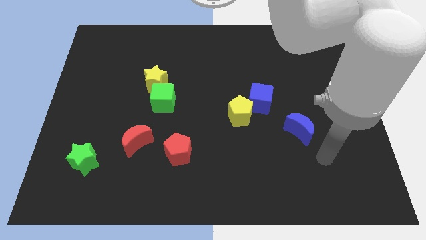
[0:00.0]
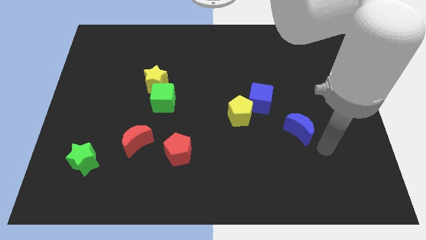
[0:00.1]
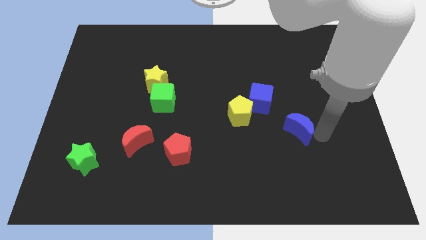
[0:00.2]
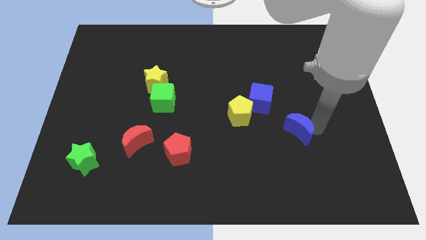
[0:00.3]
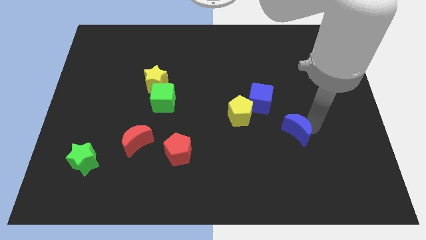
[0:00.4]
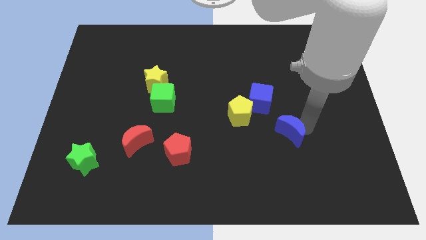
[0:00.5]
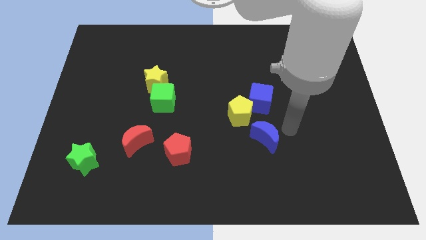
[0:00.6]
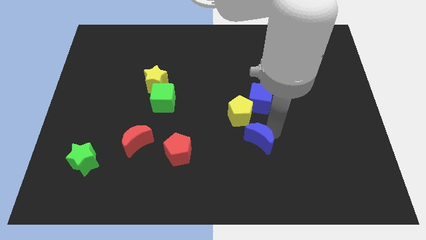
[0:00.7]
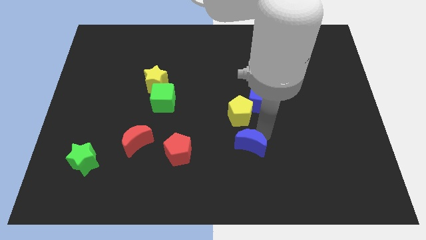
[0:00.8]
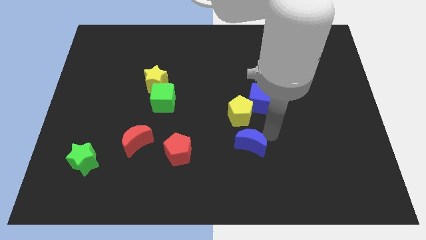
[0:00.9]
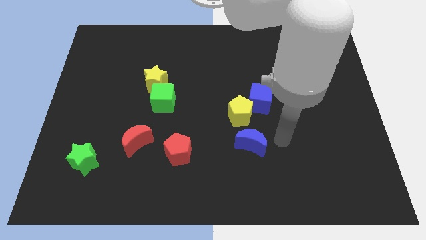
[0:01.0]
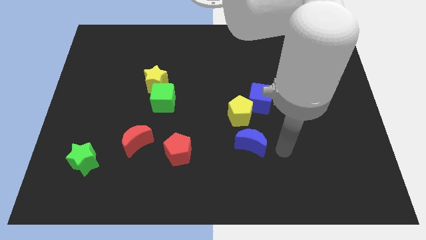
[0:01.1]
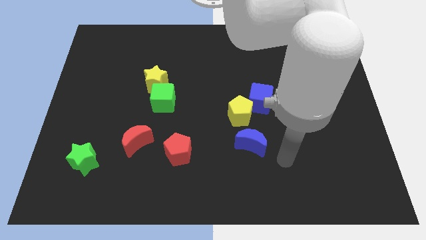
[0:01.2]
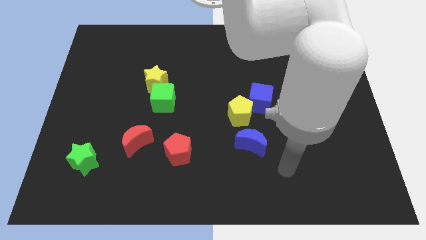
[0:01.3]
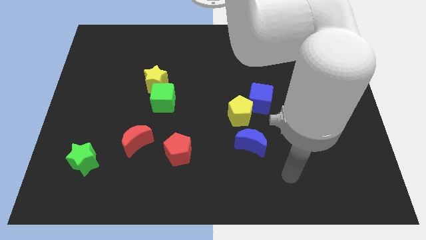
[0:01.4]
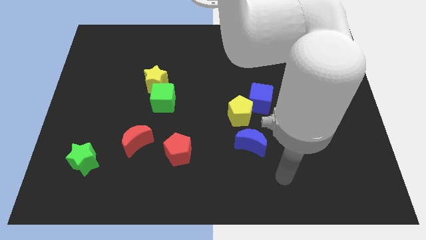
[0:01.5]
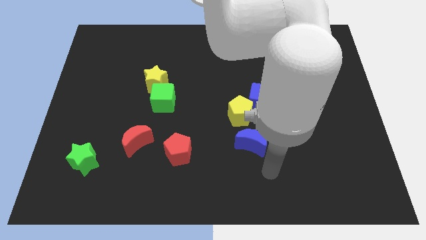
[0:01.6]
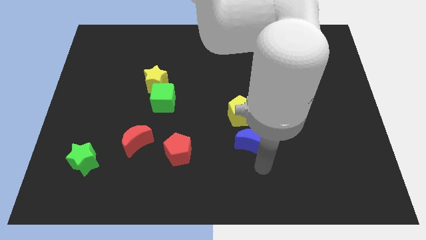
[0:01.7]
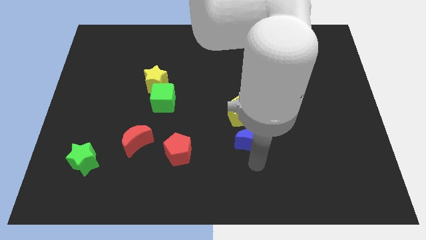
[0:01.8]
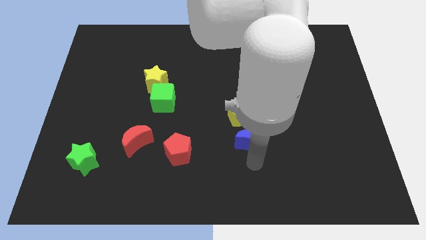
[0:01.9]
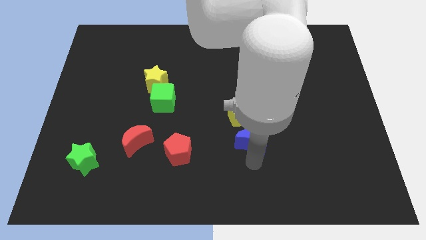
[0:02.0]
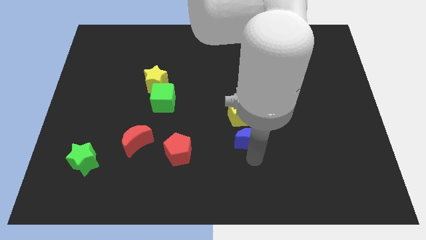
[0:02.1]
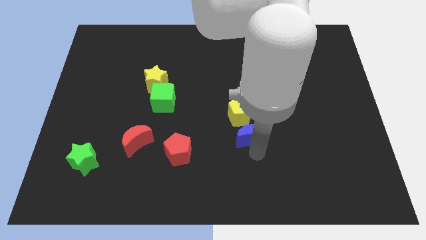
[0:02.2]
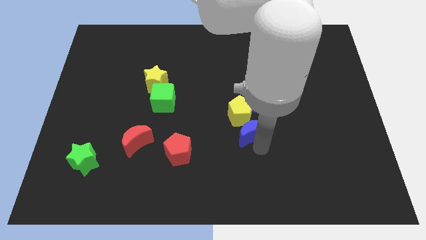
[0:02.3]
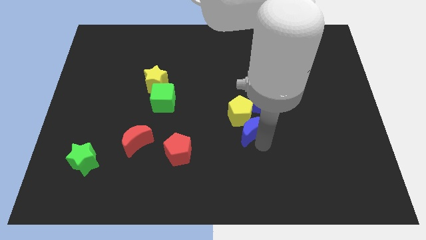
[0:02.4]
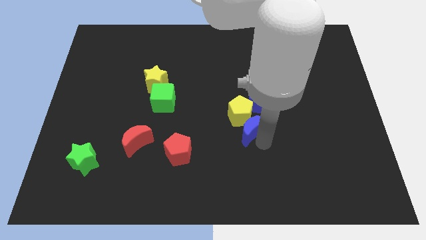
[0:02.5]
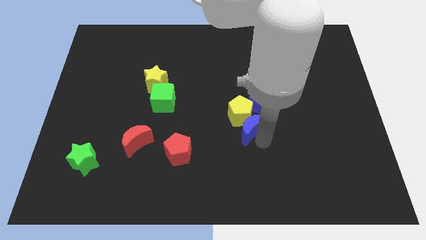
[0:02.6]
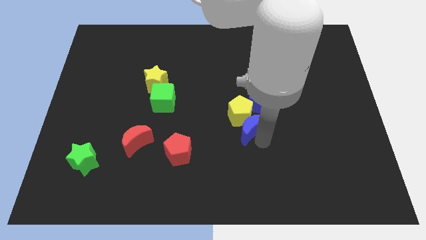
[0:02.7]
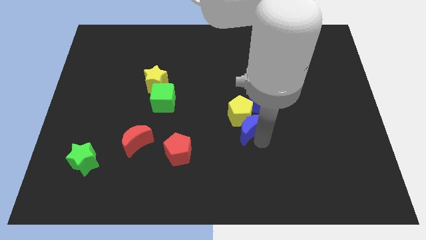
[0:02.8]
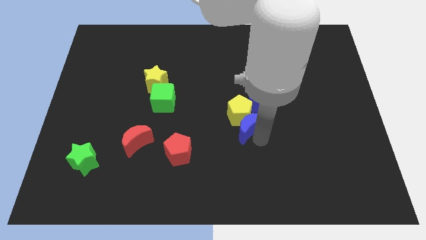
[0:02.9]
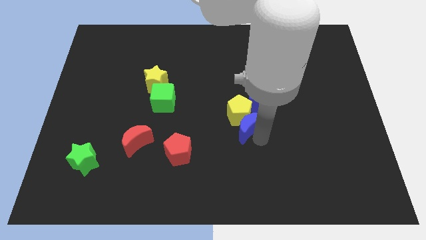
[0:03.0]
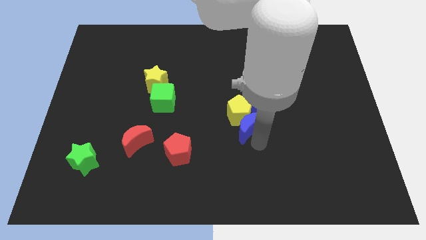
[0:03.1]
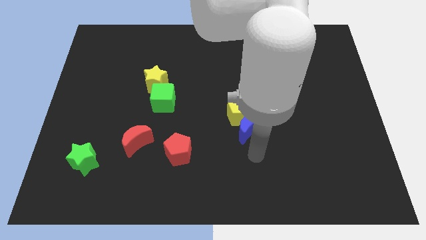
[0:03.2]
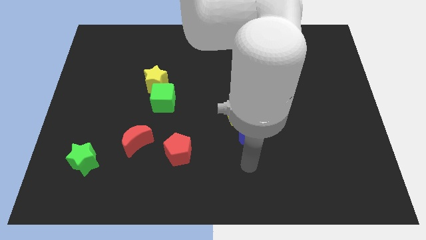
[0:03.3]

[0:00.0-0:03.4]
push the blue crescent into the yellow pentagon

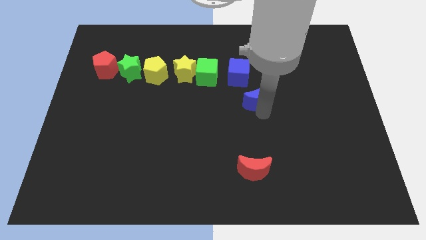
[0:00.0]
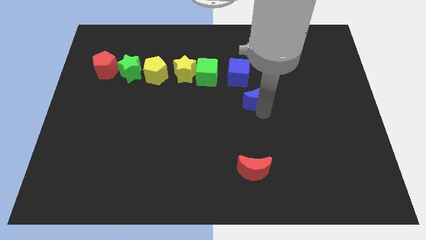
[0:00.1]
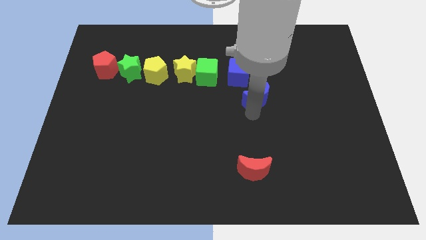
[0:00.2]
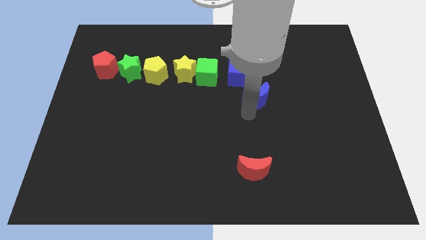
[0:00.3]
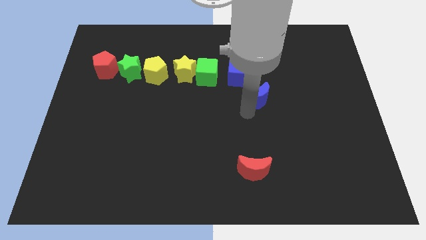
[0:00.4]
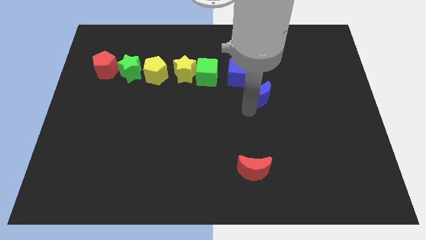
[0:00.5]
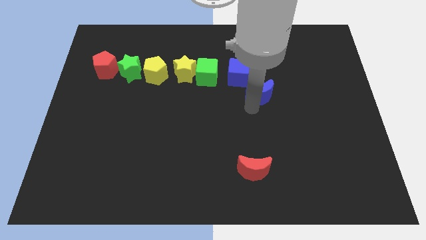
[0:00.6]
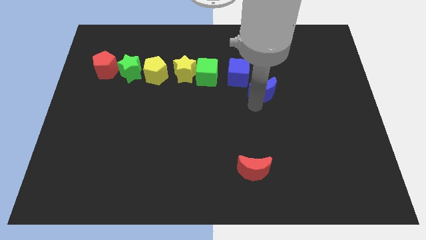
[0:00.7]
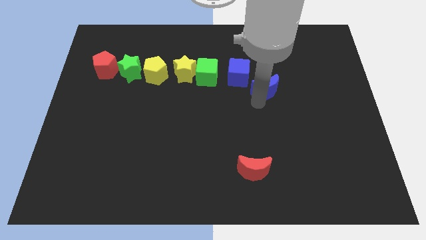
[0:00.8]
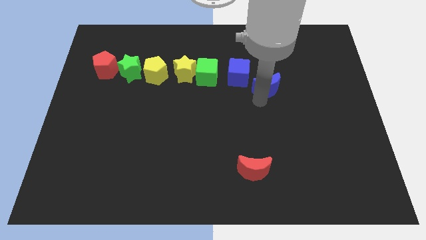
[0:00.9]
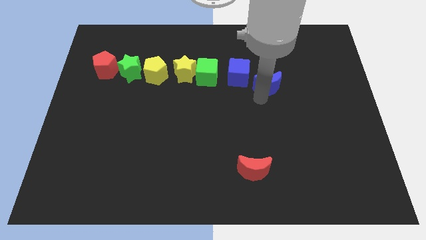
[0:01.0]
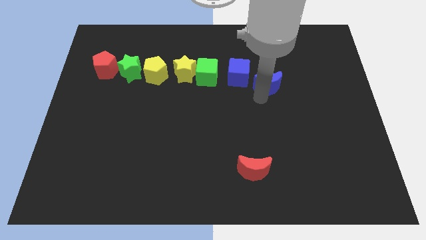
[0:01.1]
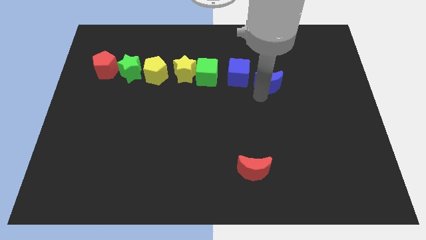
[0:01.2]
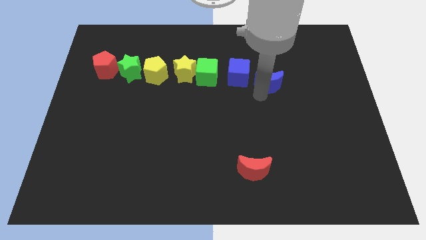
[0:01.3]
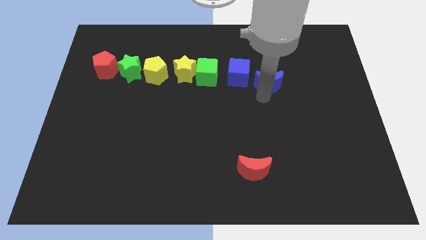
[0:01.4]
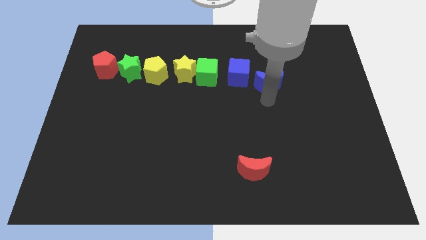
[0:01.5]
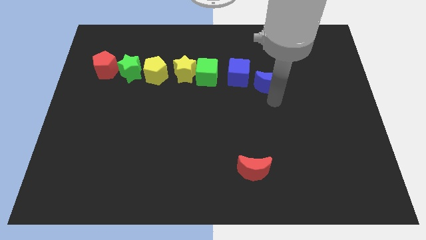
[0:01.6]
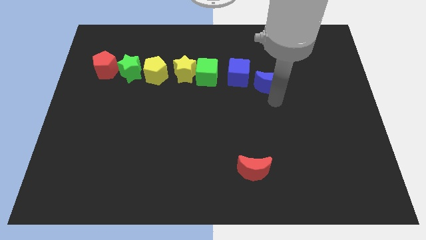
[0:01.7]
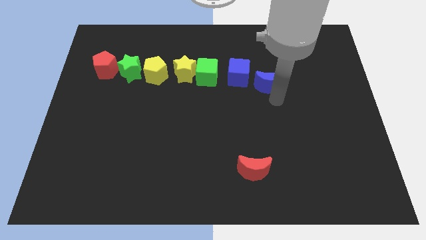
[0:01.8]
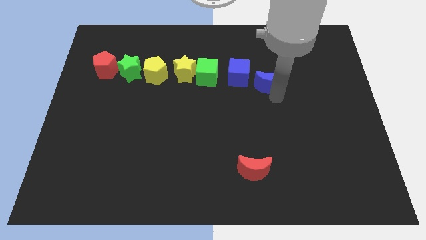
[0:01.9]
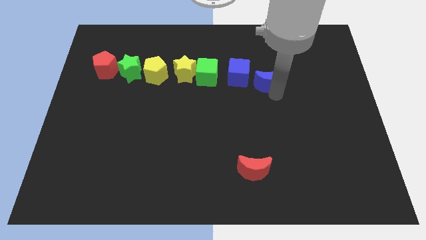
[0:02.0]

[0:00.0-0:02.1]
put the blue crescent on the right side of the blue cube

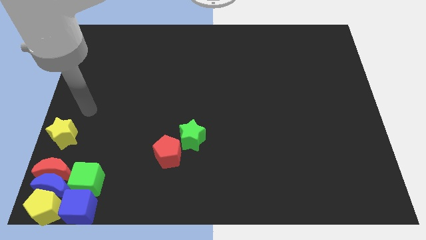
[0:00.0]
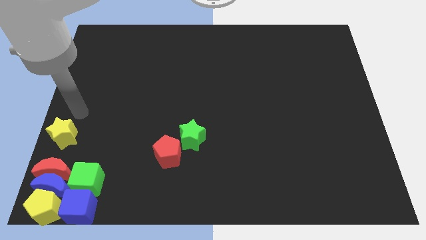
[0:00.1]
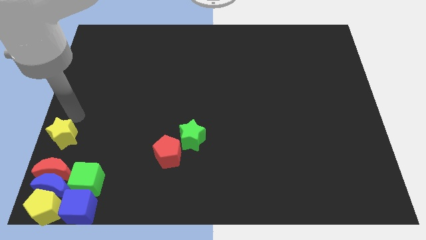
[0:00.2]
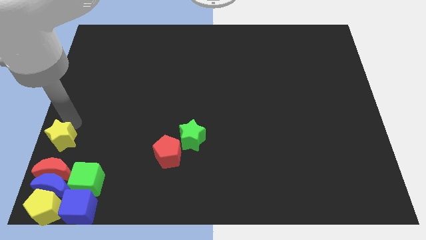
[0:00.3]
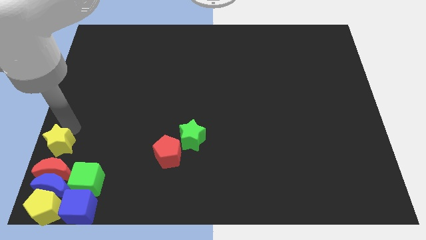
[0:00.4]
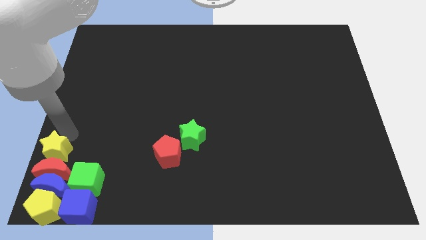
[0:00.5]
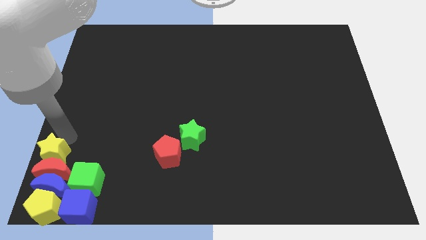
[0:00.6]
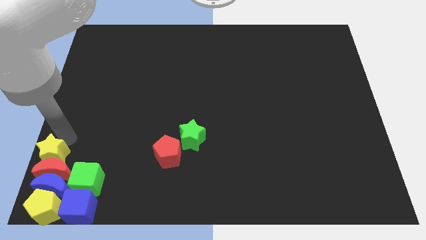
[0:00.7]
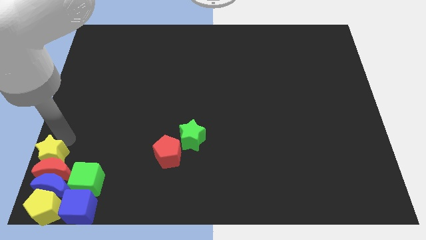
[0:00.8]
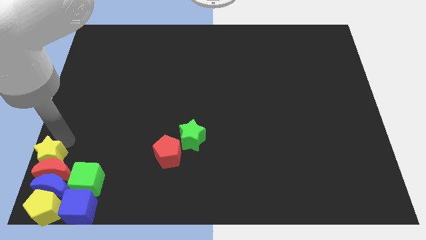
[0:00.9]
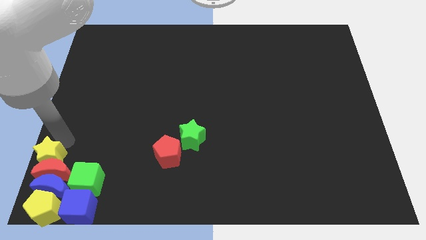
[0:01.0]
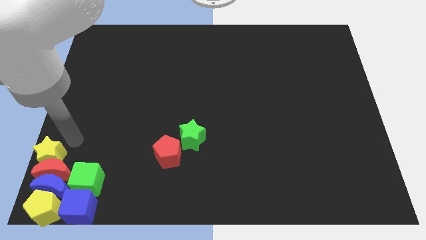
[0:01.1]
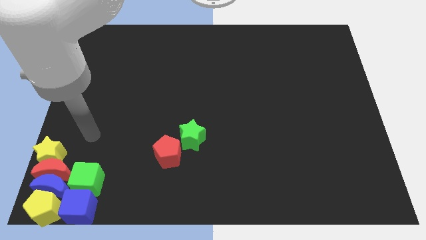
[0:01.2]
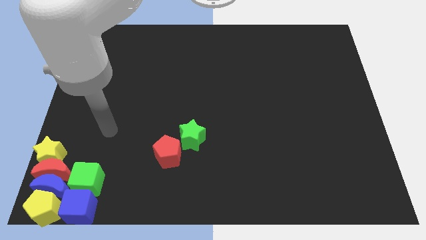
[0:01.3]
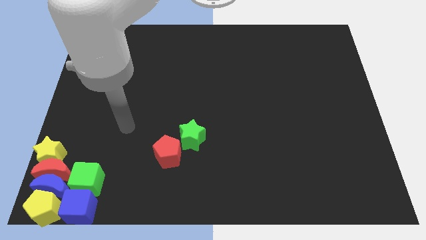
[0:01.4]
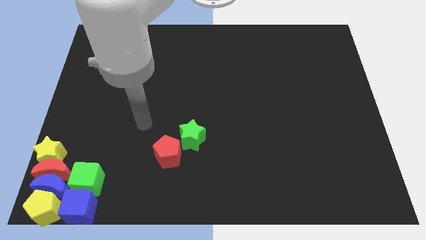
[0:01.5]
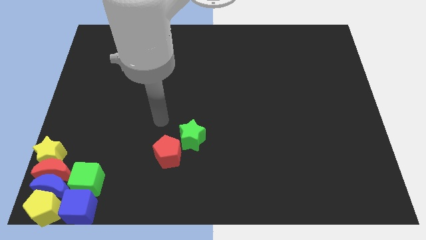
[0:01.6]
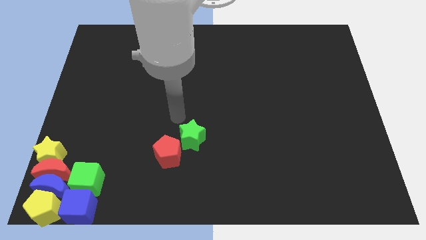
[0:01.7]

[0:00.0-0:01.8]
place yellow star to the top of the red moon

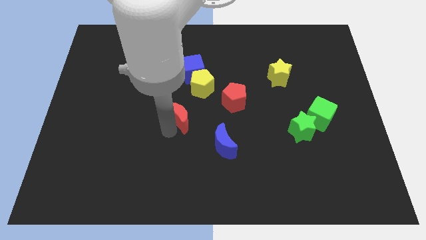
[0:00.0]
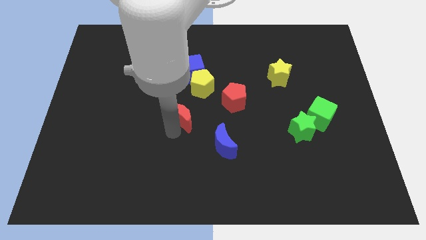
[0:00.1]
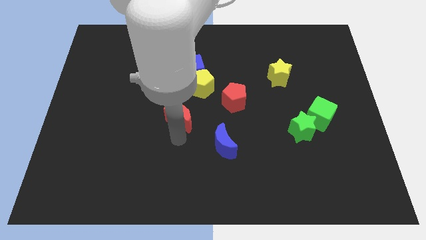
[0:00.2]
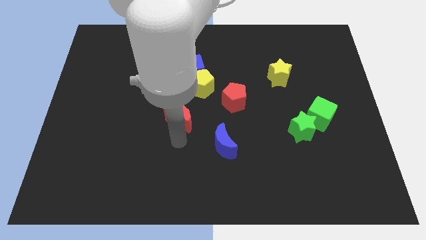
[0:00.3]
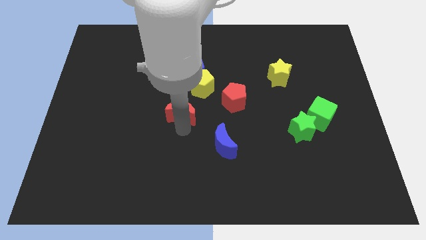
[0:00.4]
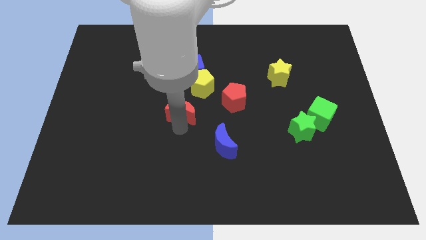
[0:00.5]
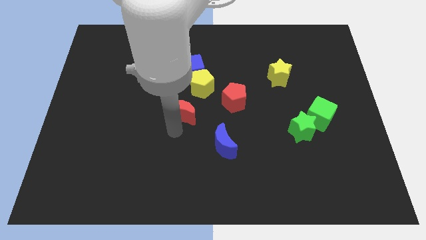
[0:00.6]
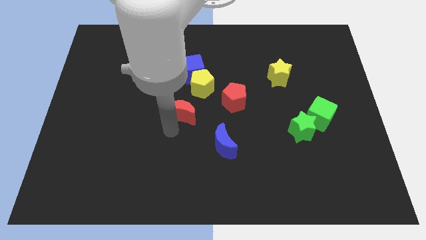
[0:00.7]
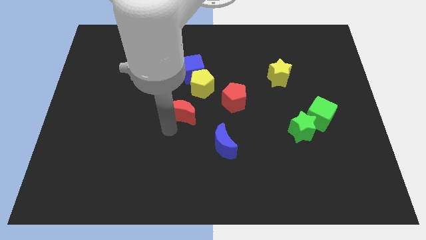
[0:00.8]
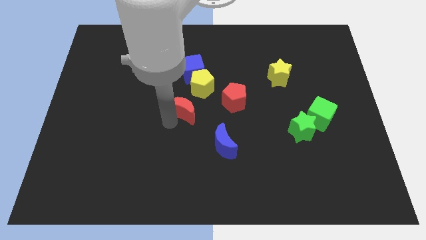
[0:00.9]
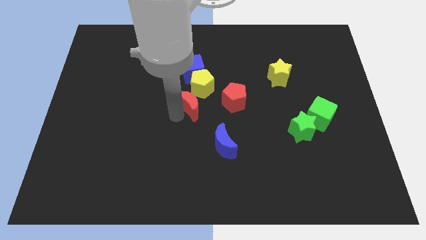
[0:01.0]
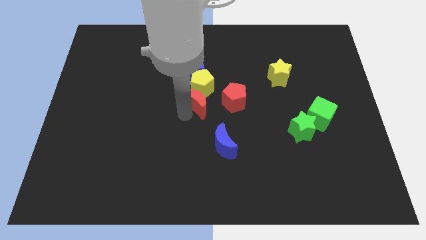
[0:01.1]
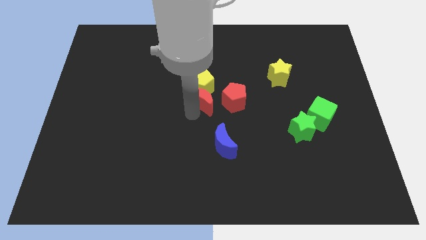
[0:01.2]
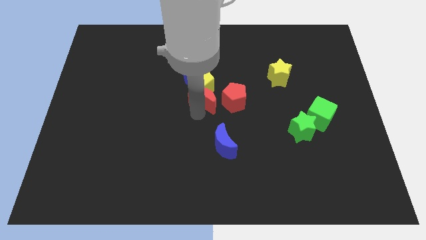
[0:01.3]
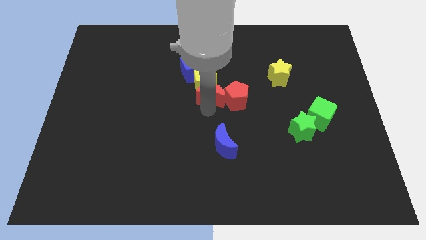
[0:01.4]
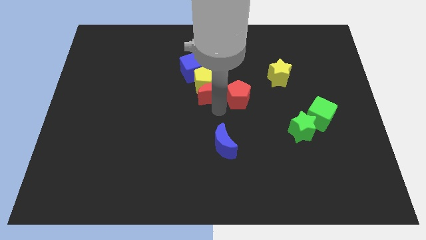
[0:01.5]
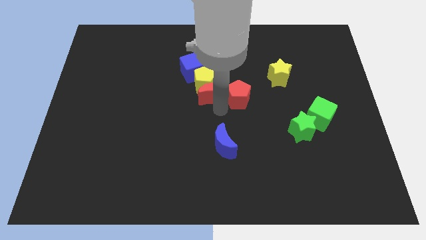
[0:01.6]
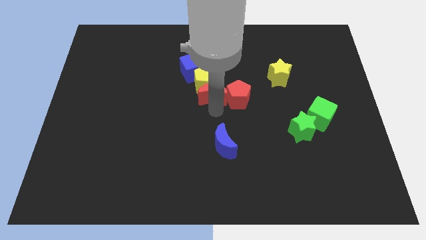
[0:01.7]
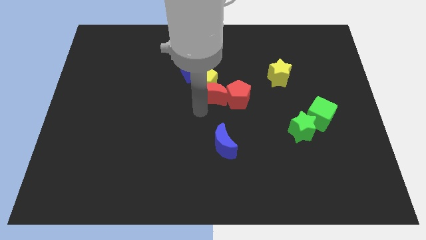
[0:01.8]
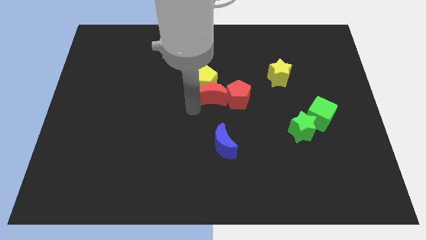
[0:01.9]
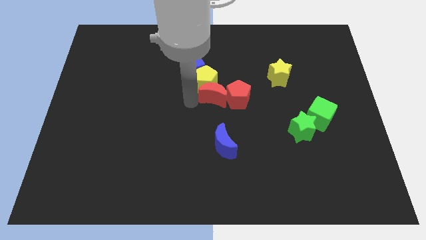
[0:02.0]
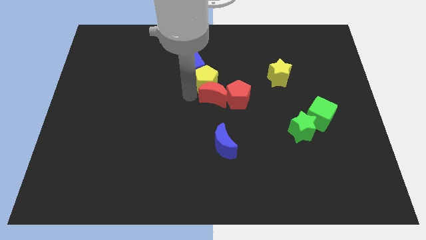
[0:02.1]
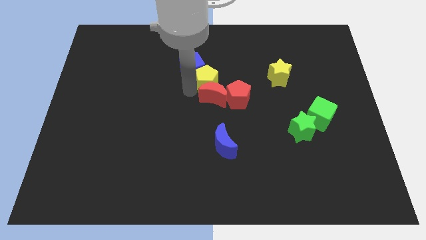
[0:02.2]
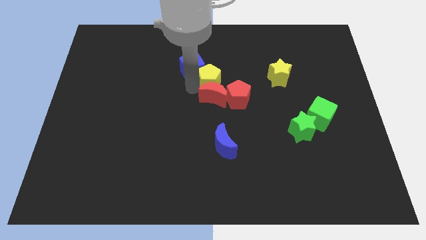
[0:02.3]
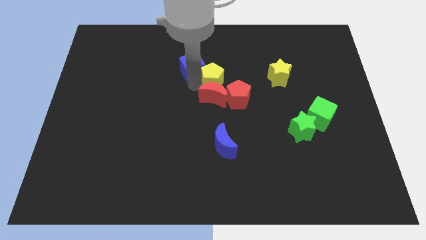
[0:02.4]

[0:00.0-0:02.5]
push red crescent in to yellow pentagon
